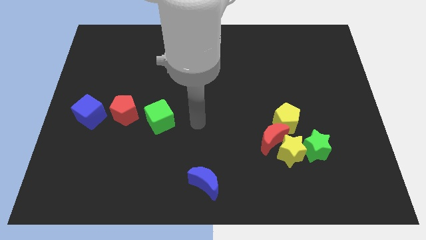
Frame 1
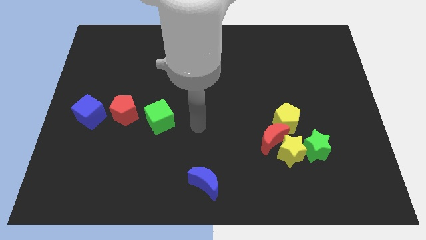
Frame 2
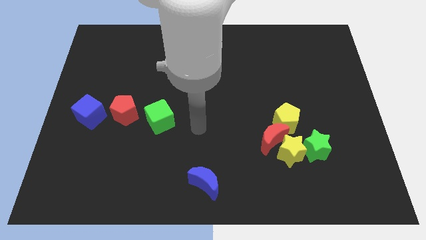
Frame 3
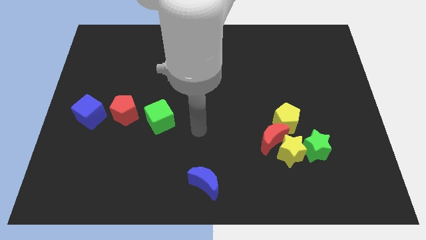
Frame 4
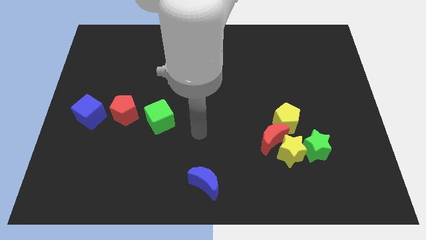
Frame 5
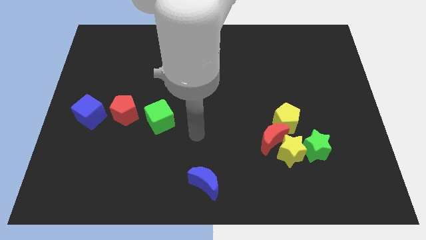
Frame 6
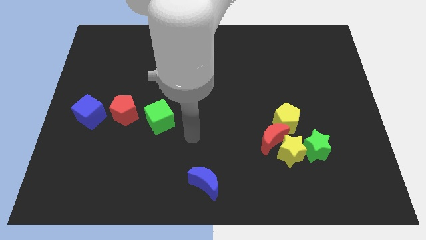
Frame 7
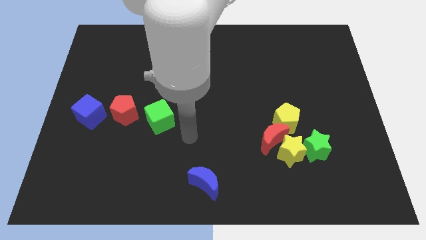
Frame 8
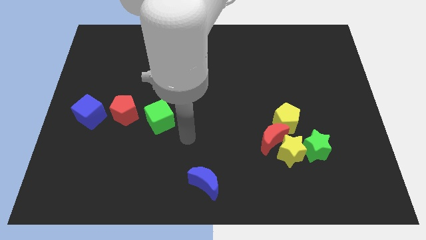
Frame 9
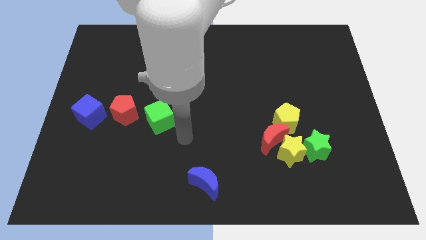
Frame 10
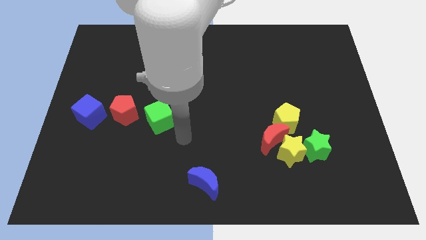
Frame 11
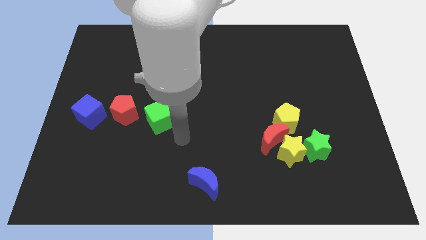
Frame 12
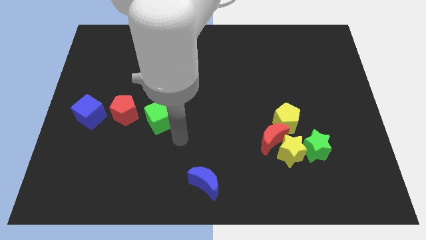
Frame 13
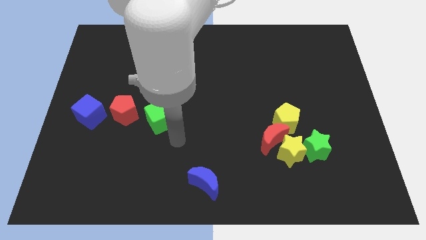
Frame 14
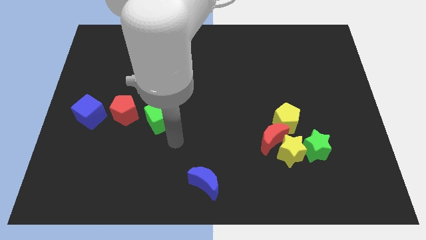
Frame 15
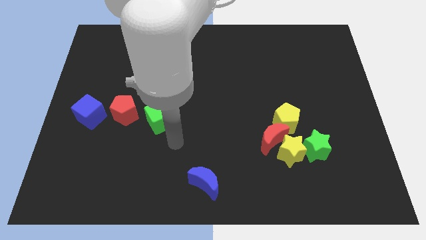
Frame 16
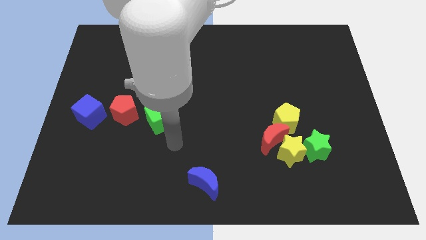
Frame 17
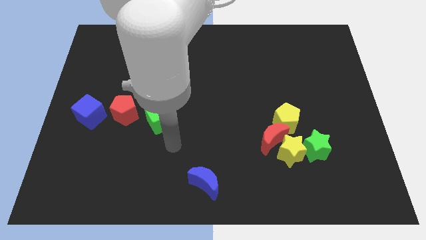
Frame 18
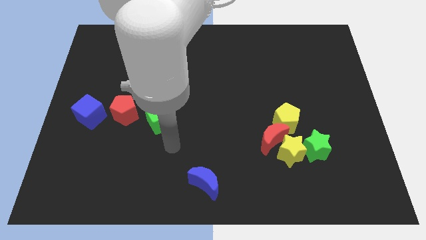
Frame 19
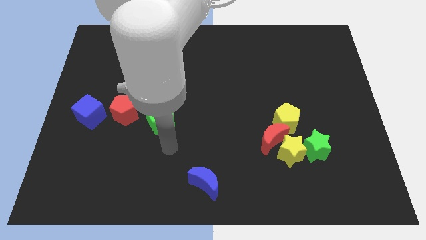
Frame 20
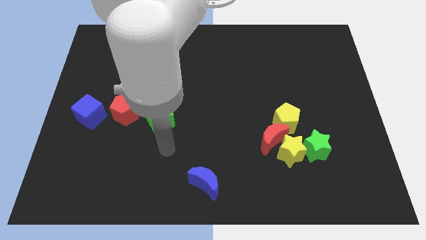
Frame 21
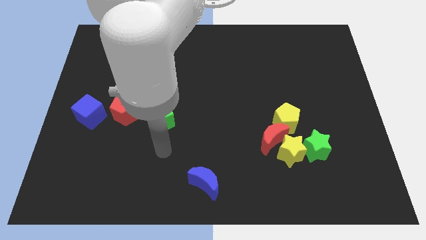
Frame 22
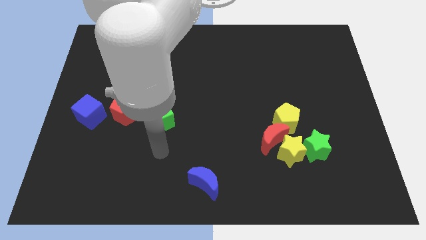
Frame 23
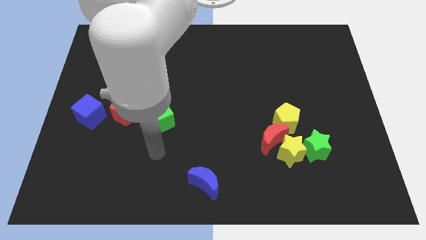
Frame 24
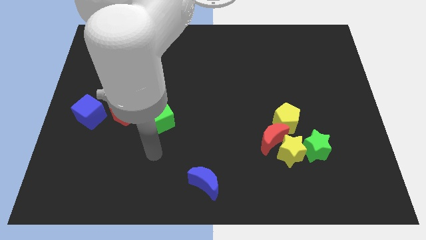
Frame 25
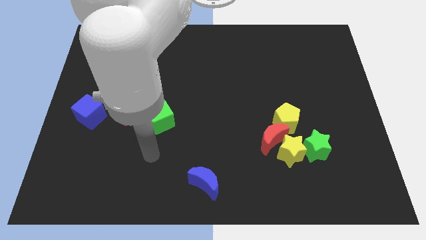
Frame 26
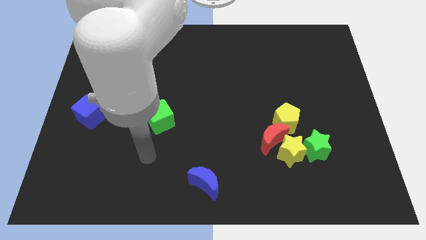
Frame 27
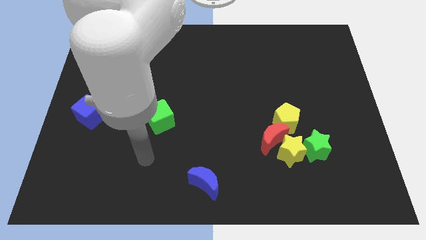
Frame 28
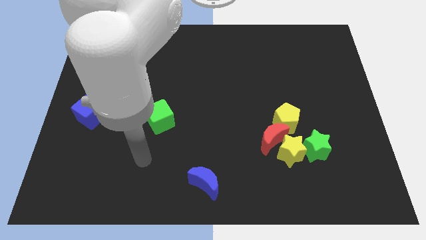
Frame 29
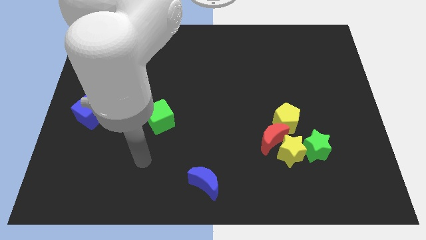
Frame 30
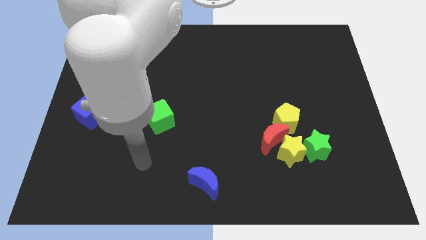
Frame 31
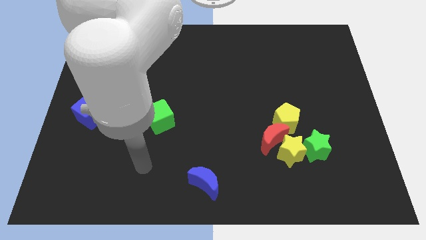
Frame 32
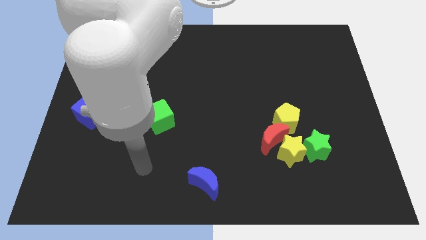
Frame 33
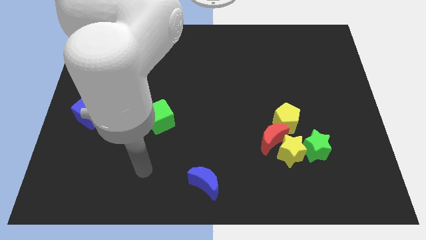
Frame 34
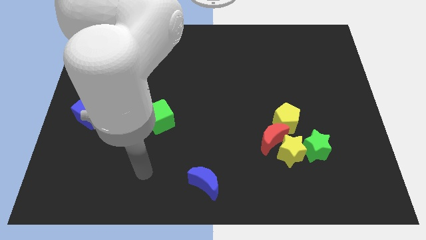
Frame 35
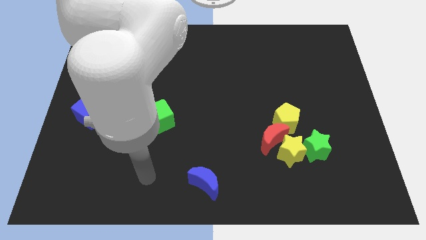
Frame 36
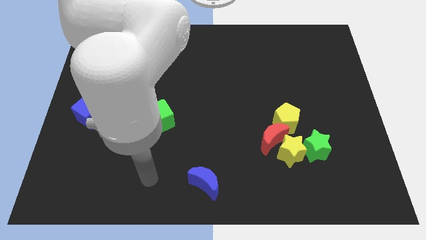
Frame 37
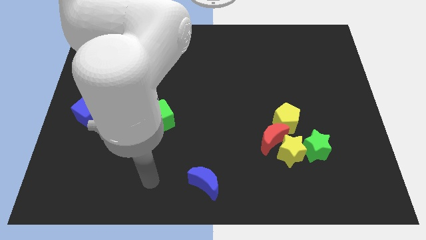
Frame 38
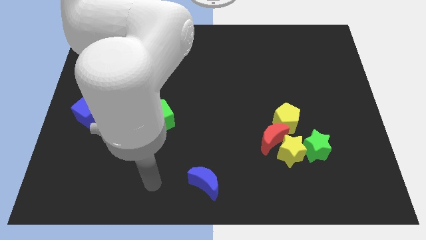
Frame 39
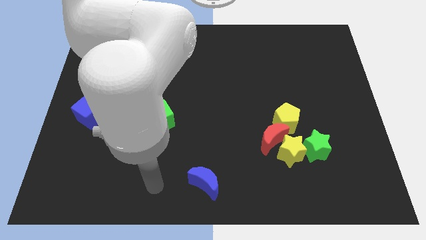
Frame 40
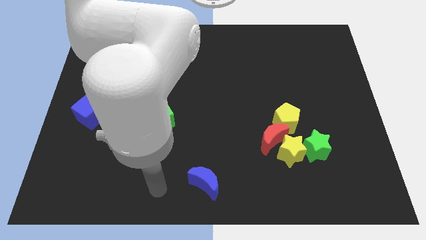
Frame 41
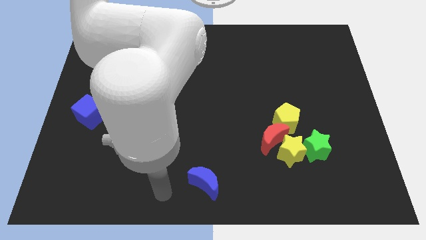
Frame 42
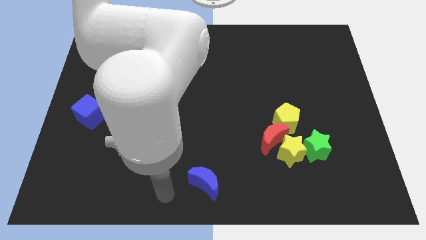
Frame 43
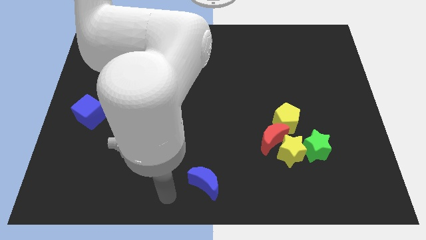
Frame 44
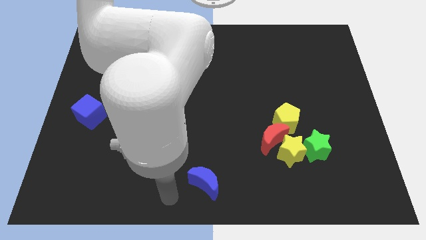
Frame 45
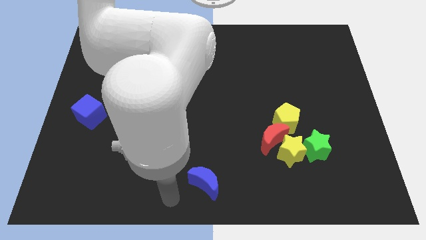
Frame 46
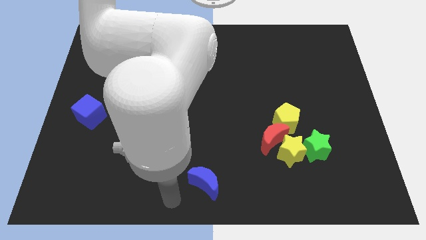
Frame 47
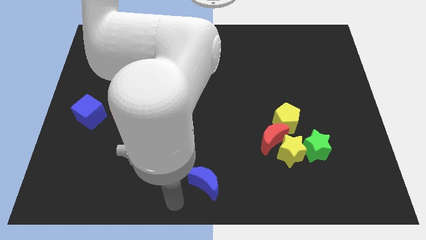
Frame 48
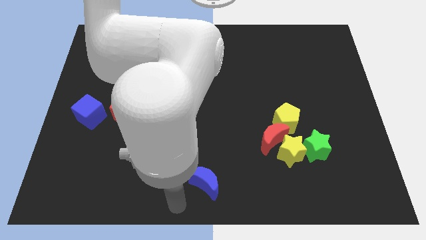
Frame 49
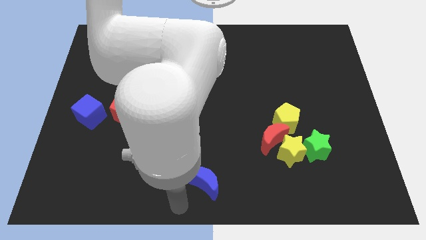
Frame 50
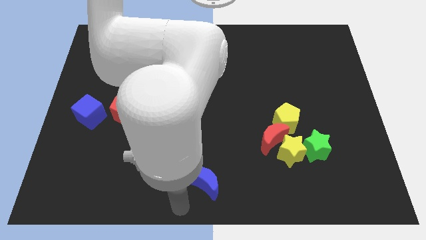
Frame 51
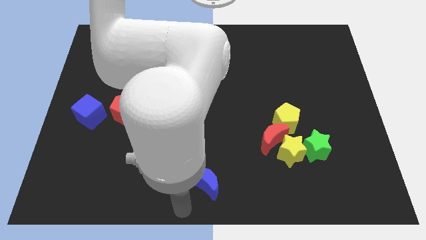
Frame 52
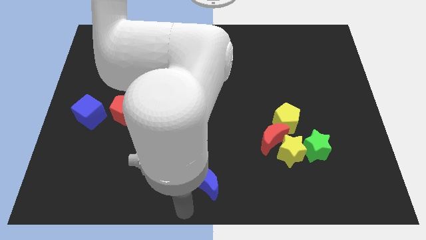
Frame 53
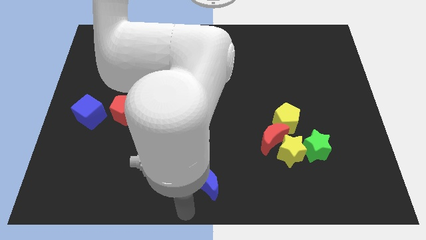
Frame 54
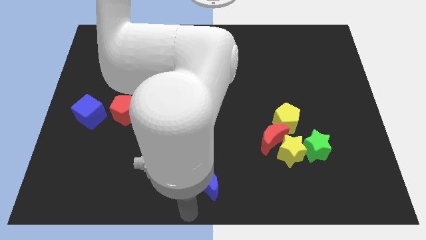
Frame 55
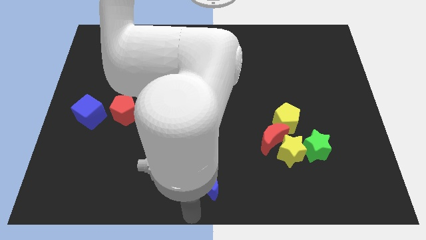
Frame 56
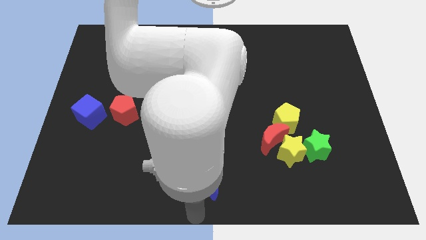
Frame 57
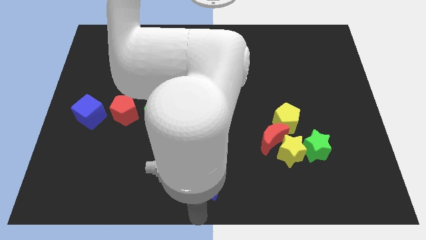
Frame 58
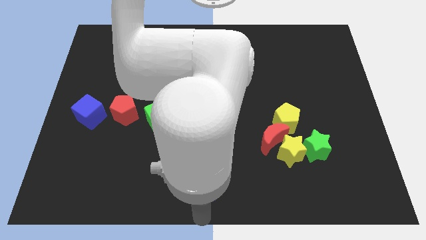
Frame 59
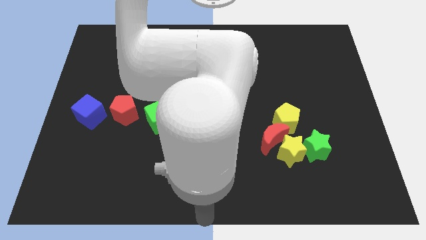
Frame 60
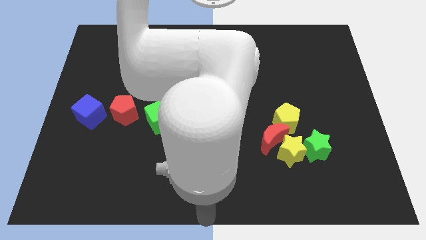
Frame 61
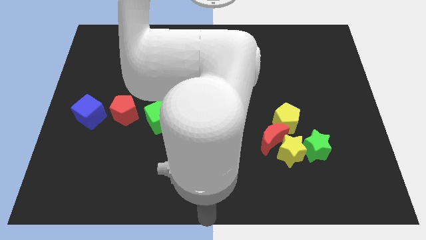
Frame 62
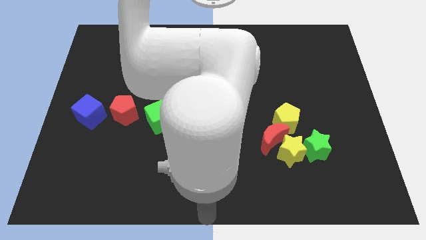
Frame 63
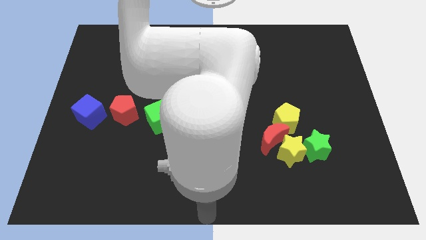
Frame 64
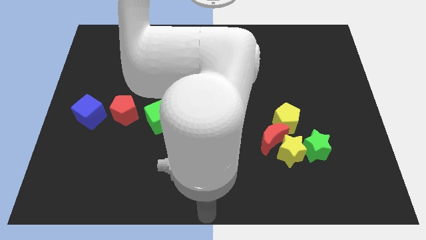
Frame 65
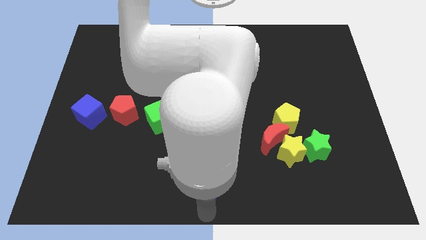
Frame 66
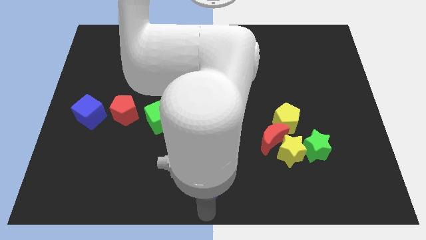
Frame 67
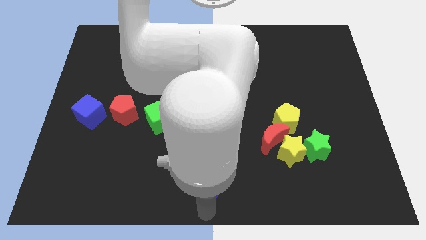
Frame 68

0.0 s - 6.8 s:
go near blue moon

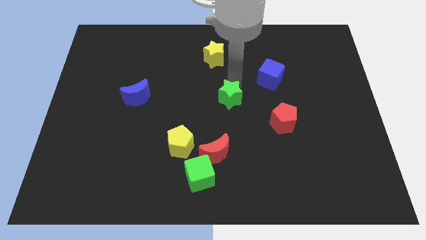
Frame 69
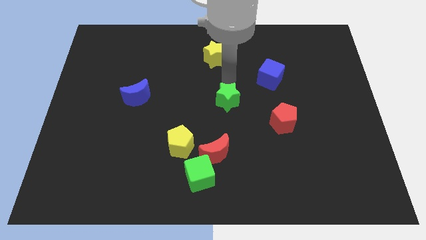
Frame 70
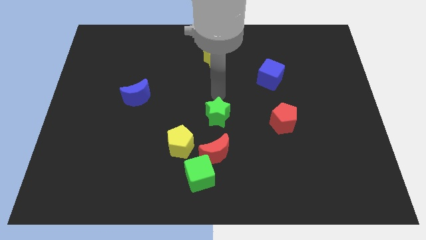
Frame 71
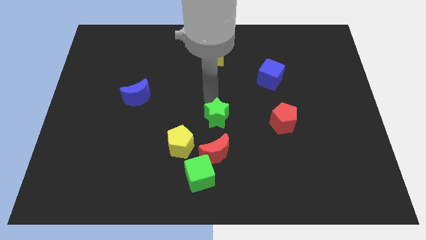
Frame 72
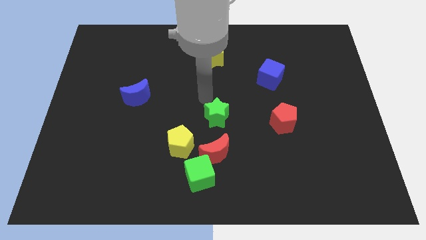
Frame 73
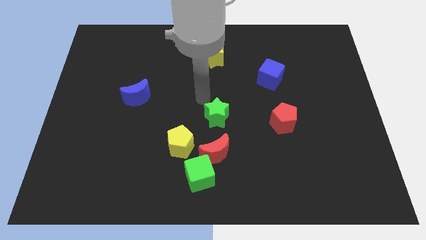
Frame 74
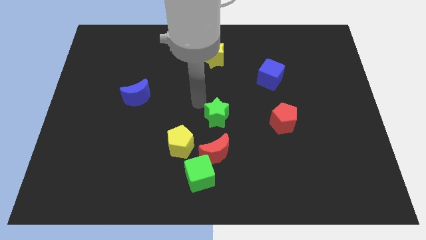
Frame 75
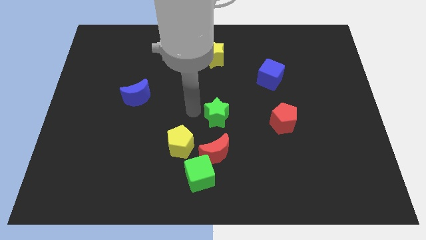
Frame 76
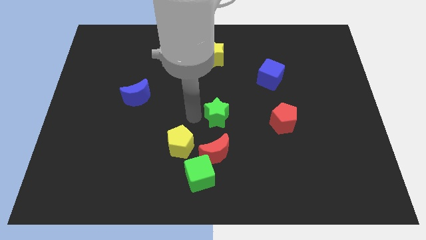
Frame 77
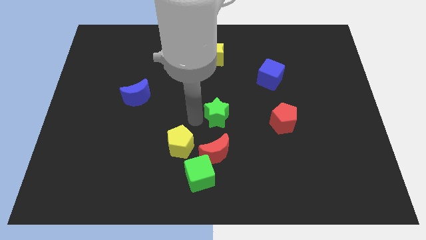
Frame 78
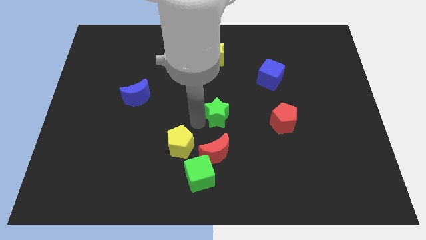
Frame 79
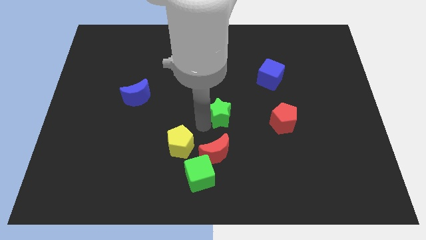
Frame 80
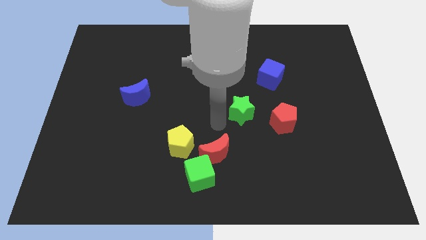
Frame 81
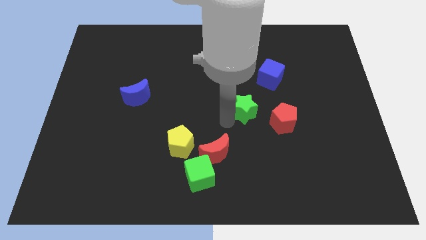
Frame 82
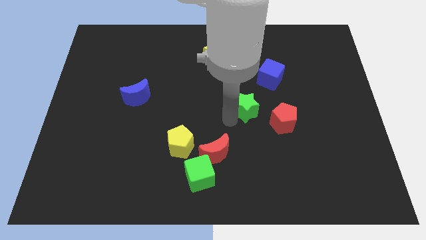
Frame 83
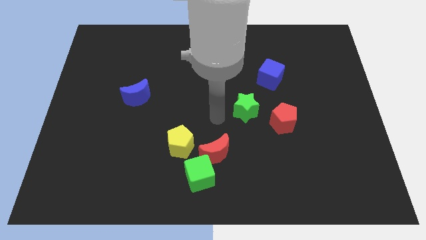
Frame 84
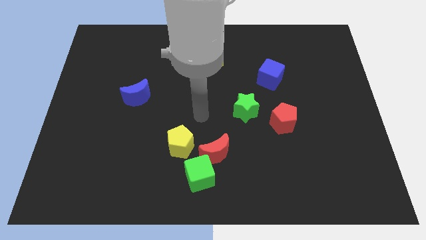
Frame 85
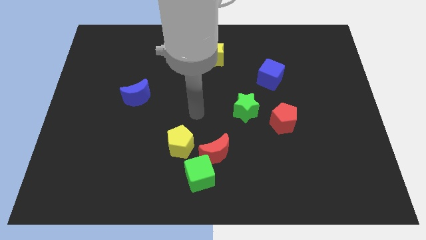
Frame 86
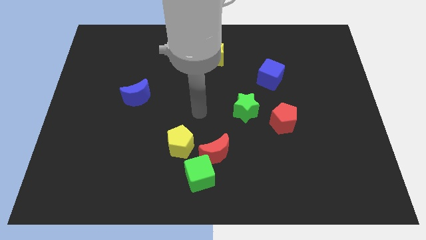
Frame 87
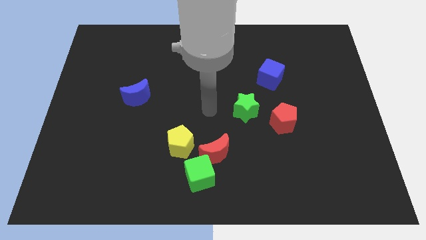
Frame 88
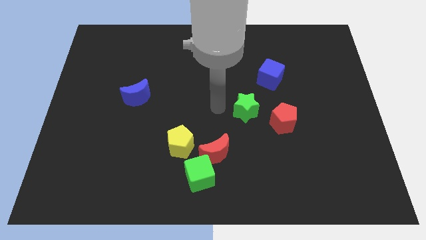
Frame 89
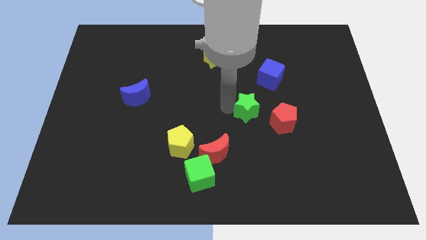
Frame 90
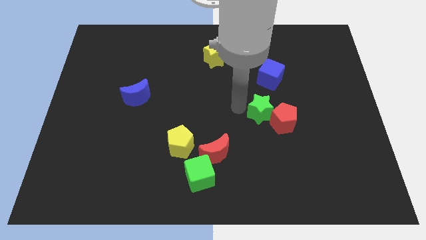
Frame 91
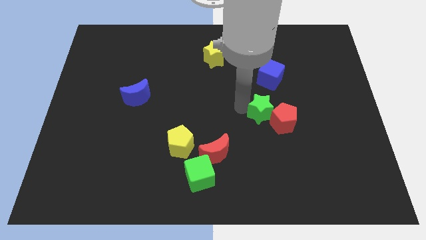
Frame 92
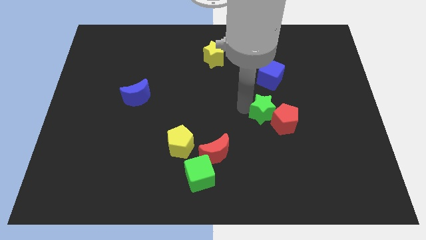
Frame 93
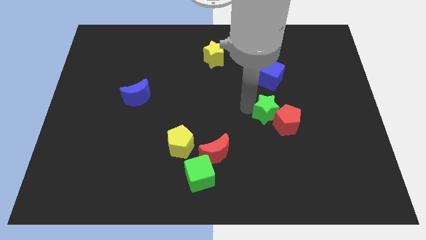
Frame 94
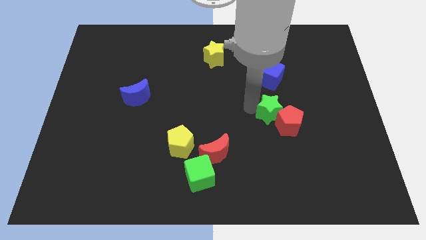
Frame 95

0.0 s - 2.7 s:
move the green star into the red pentagon
